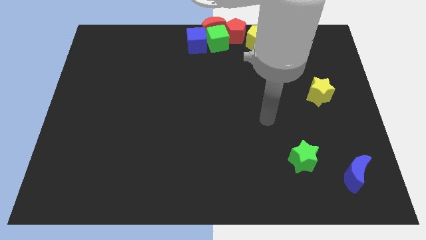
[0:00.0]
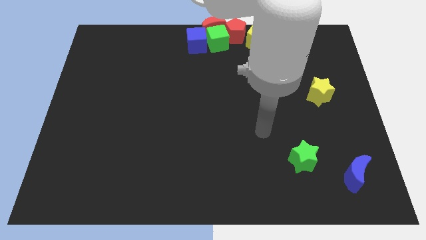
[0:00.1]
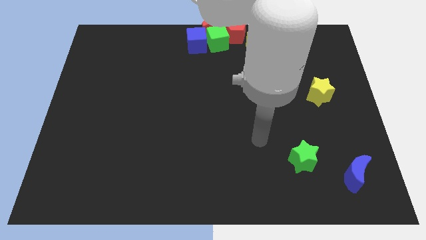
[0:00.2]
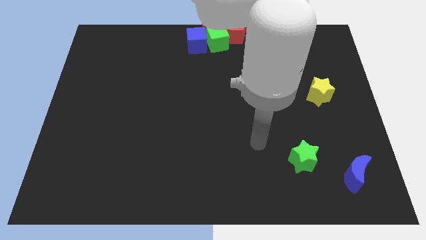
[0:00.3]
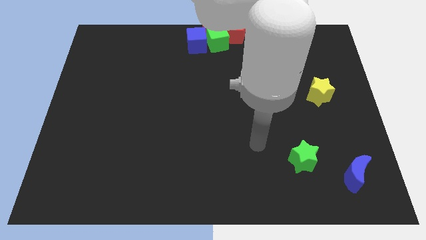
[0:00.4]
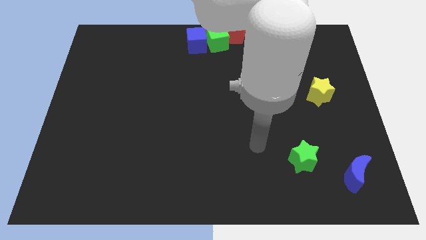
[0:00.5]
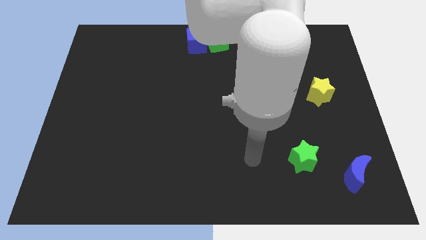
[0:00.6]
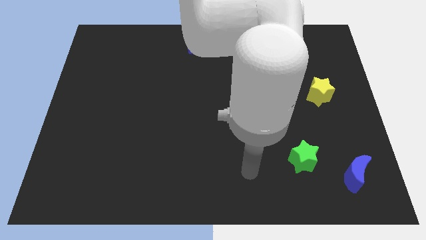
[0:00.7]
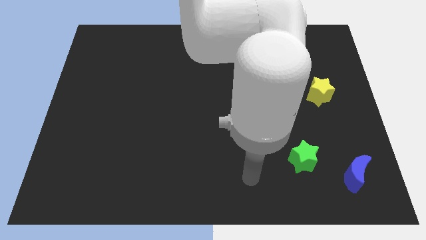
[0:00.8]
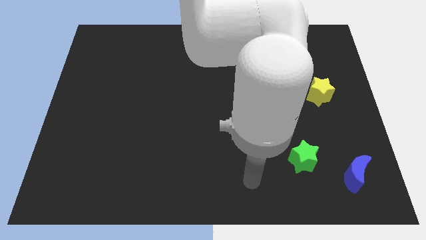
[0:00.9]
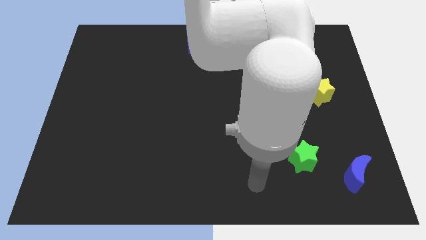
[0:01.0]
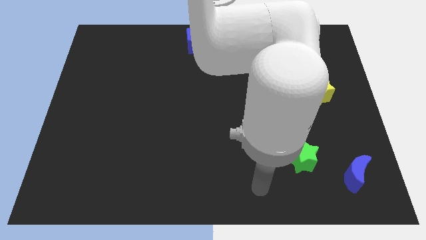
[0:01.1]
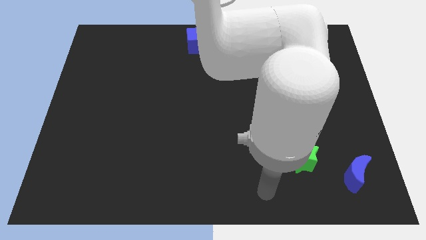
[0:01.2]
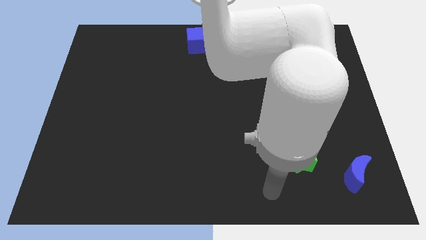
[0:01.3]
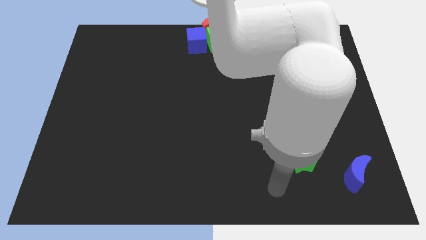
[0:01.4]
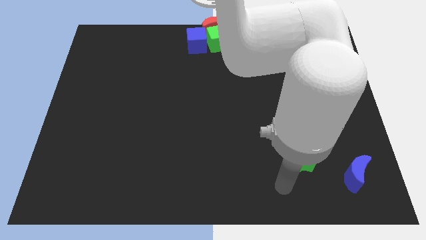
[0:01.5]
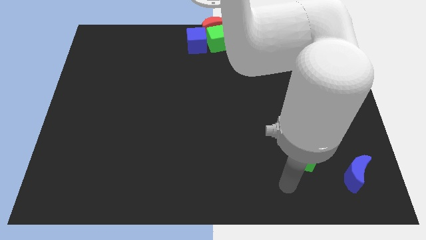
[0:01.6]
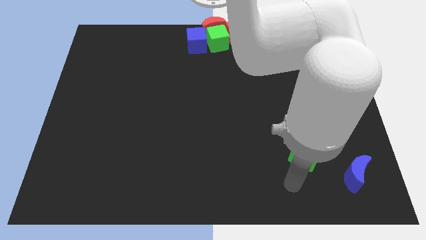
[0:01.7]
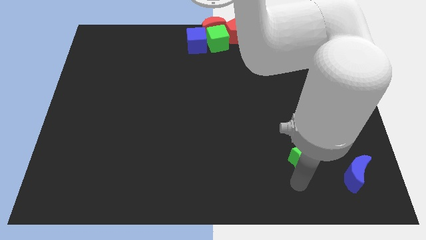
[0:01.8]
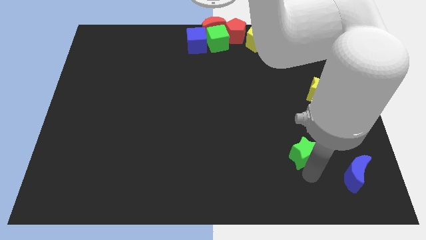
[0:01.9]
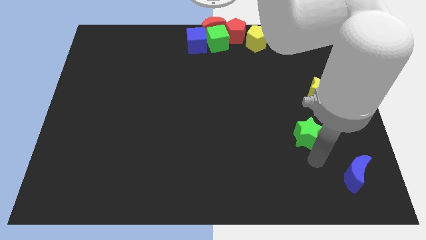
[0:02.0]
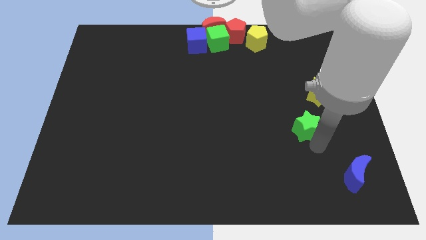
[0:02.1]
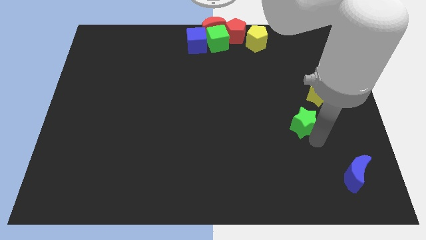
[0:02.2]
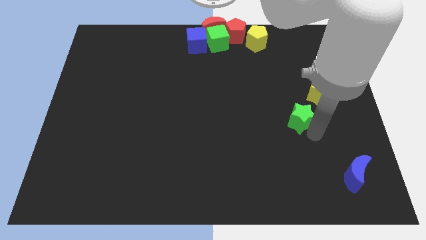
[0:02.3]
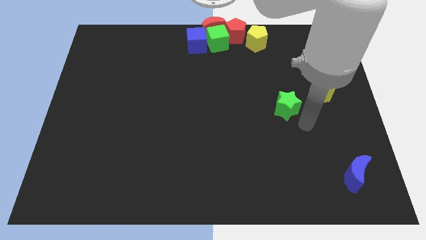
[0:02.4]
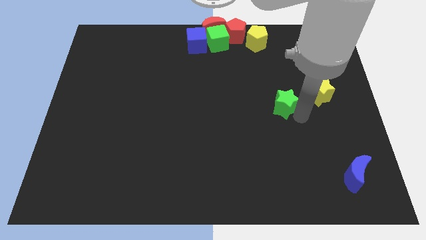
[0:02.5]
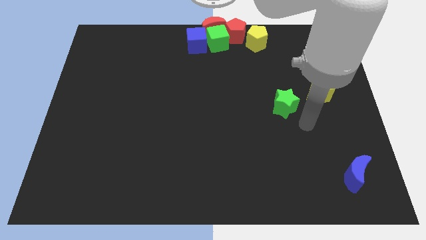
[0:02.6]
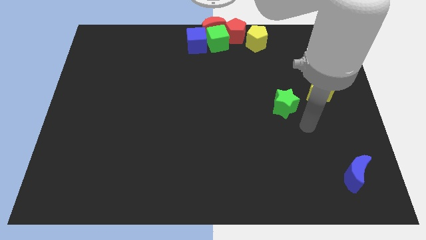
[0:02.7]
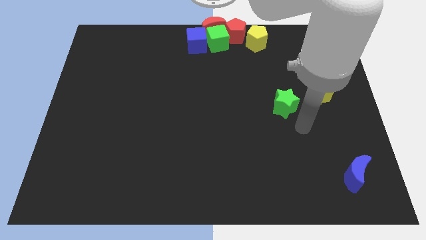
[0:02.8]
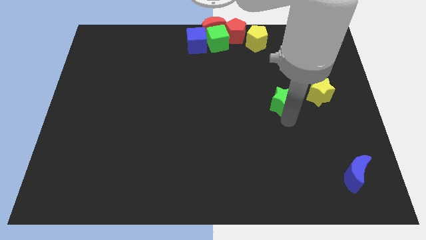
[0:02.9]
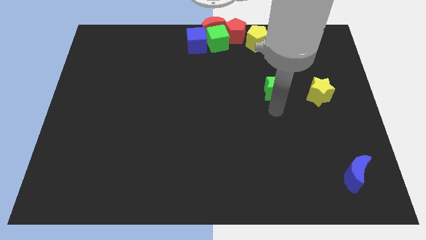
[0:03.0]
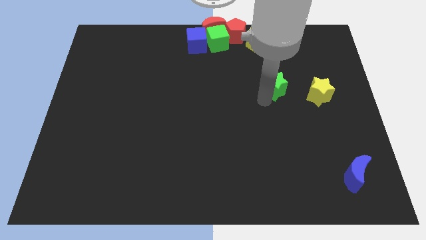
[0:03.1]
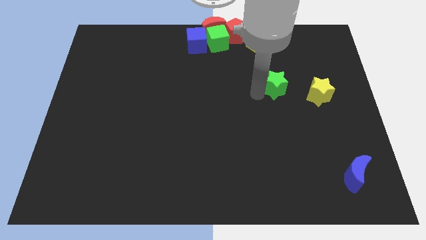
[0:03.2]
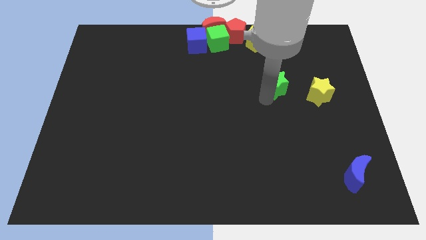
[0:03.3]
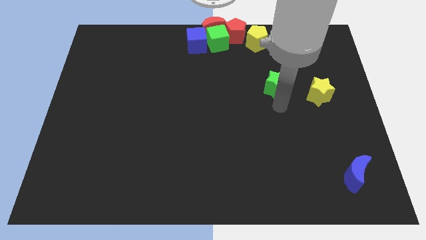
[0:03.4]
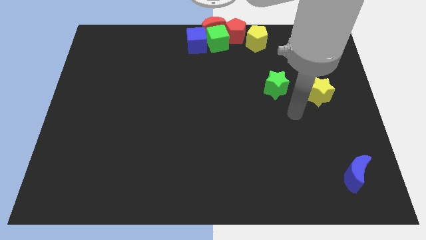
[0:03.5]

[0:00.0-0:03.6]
slide the green star diagonally to the blue crescent

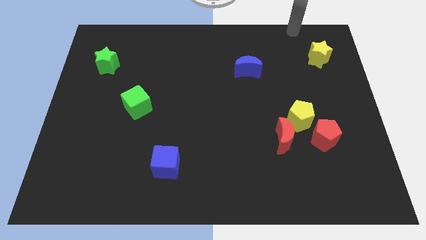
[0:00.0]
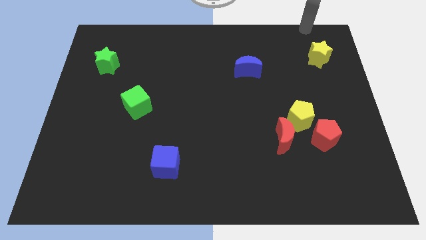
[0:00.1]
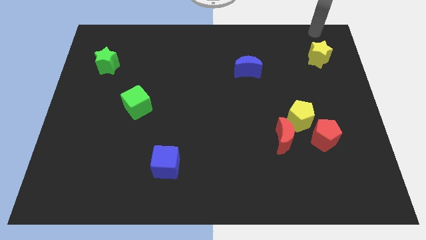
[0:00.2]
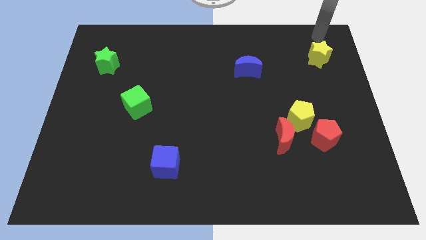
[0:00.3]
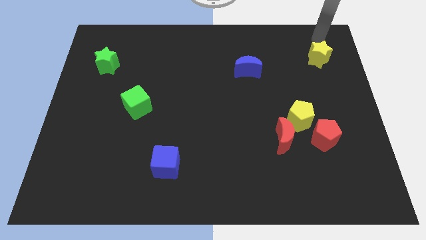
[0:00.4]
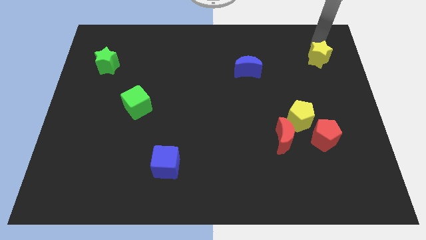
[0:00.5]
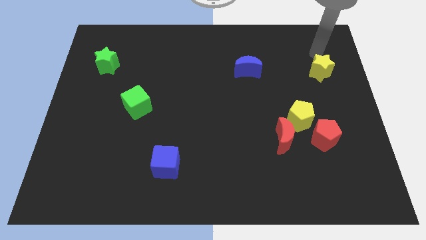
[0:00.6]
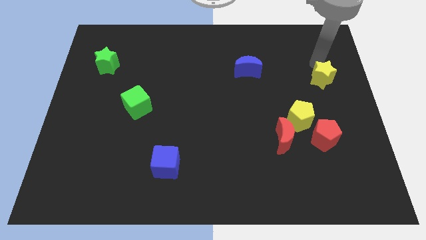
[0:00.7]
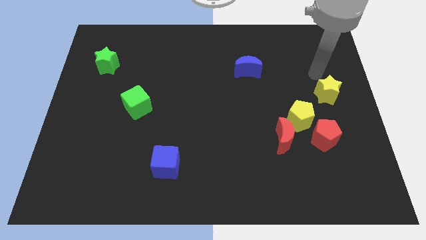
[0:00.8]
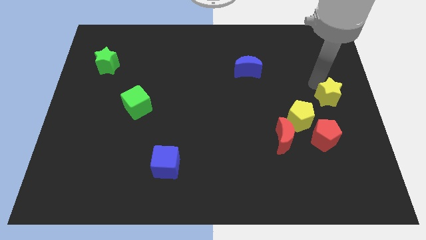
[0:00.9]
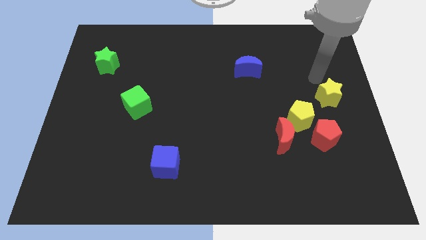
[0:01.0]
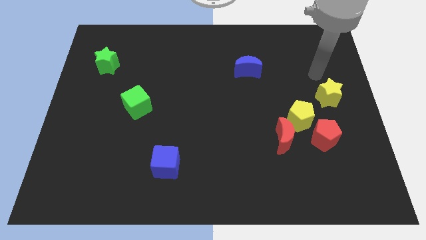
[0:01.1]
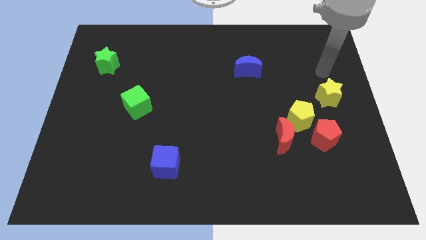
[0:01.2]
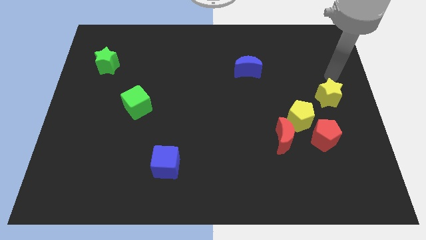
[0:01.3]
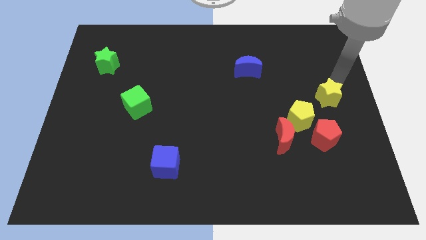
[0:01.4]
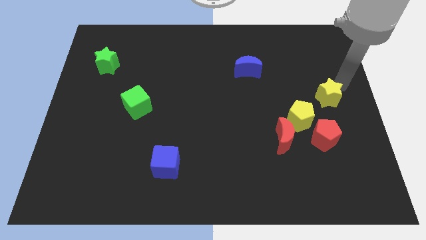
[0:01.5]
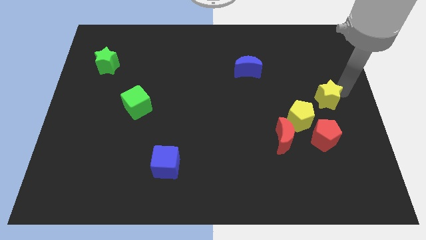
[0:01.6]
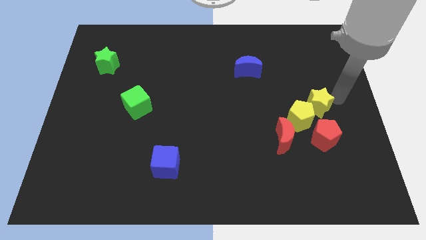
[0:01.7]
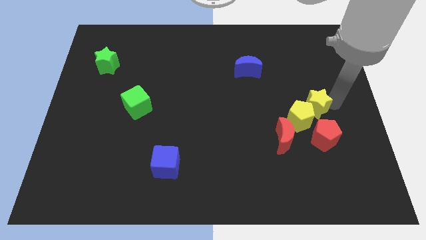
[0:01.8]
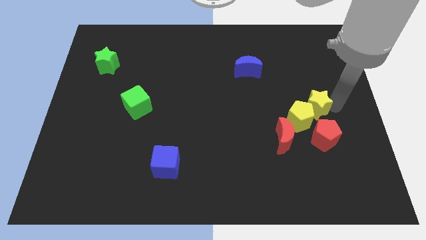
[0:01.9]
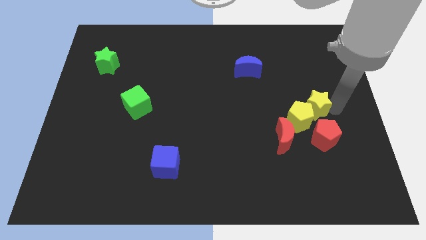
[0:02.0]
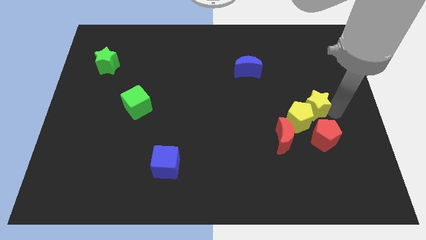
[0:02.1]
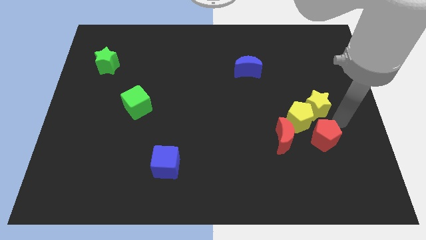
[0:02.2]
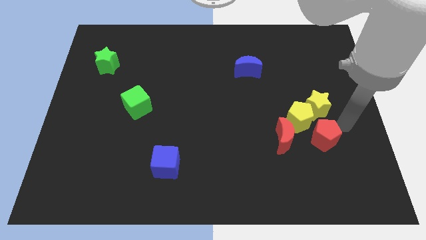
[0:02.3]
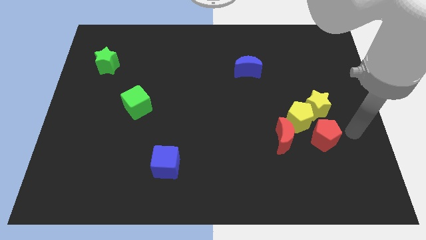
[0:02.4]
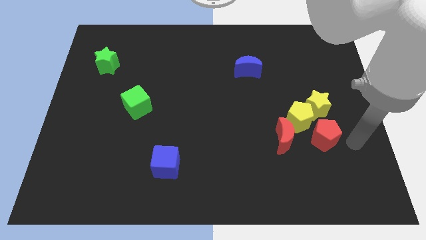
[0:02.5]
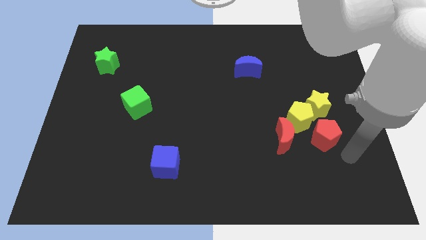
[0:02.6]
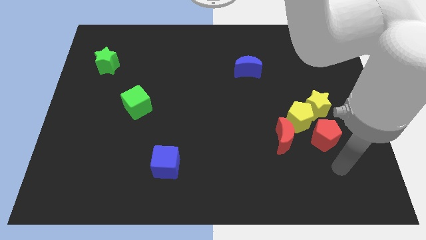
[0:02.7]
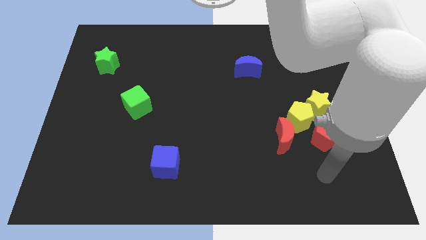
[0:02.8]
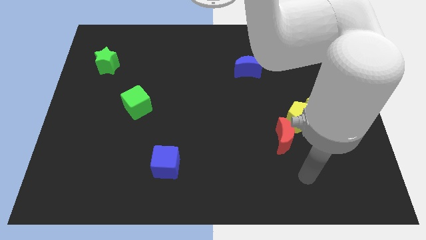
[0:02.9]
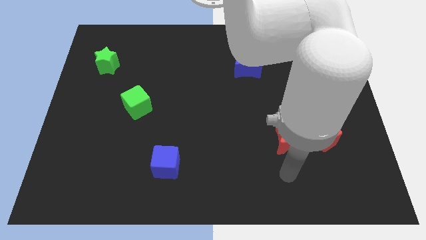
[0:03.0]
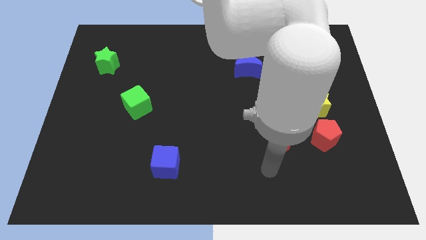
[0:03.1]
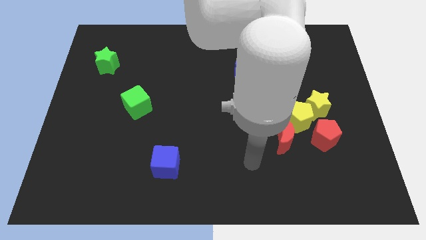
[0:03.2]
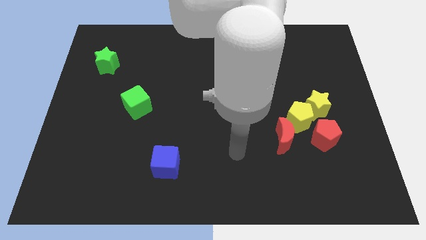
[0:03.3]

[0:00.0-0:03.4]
slide the yellow star into the yellow pentagon

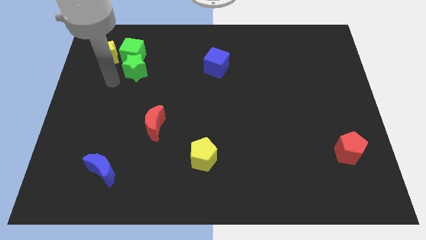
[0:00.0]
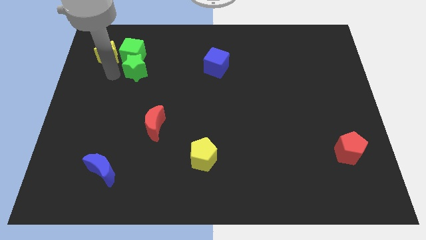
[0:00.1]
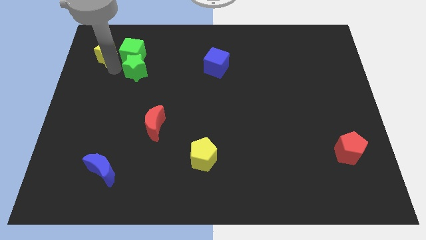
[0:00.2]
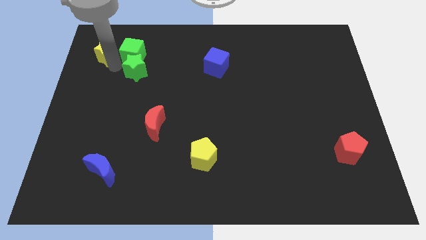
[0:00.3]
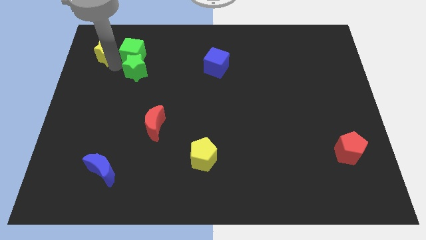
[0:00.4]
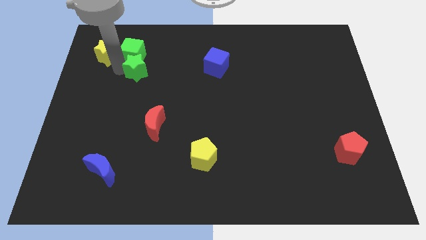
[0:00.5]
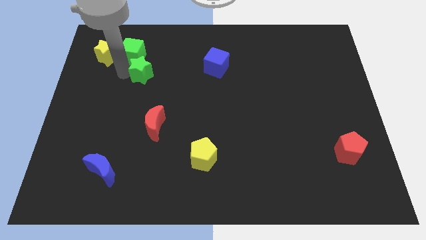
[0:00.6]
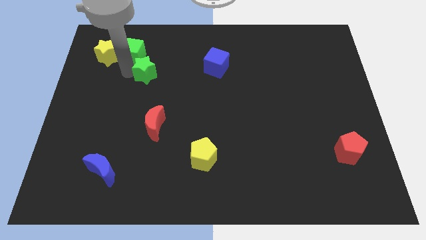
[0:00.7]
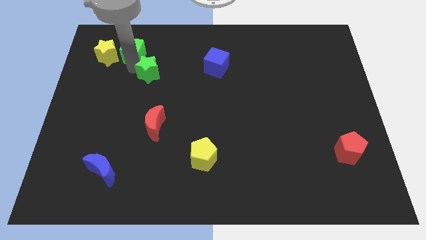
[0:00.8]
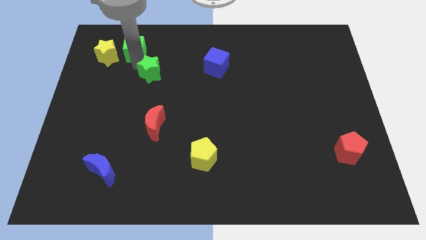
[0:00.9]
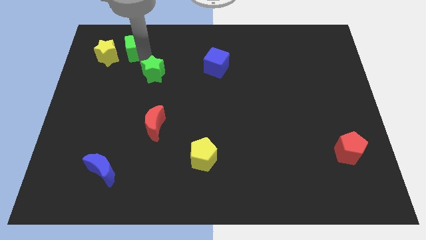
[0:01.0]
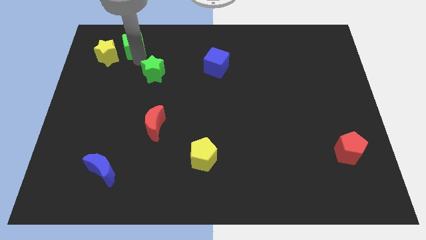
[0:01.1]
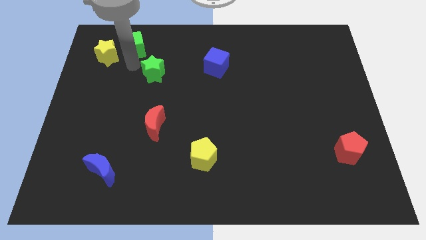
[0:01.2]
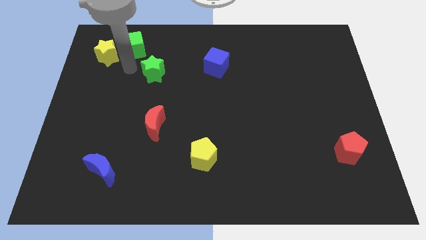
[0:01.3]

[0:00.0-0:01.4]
separate green star and green cube

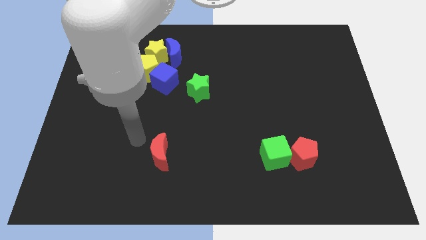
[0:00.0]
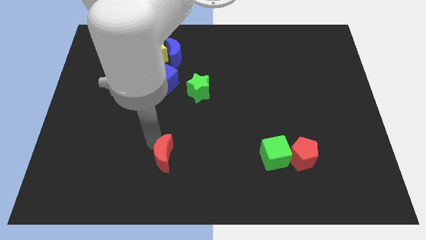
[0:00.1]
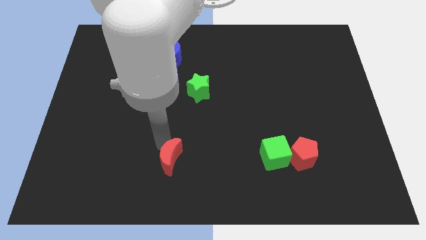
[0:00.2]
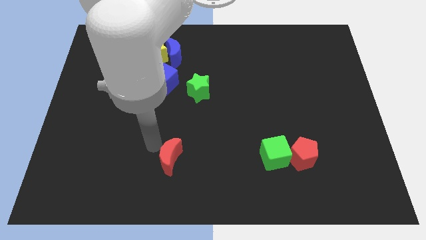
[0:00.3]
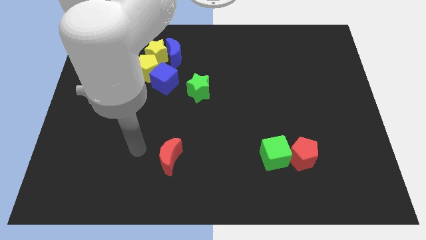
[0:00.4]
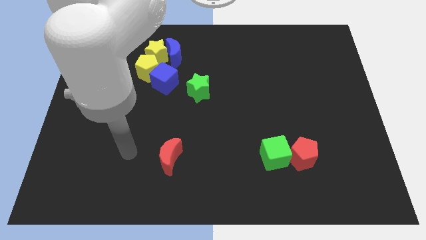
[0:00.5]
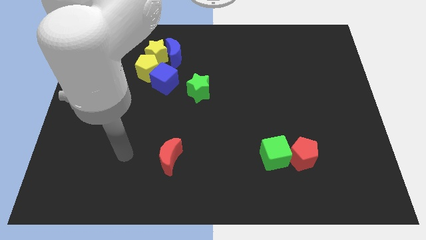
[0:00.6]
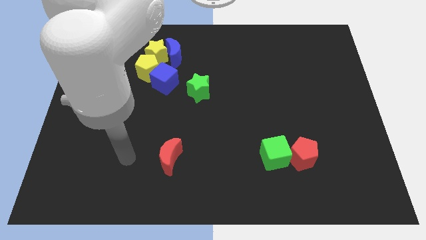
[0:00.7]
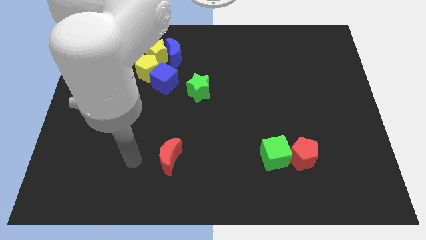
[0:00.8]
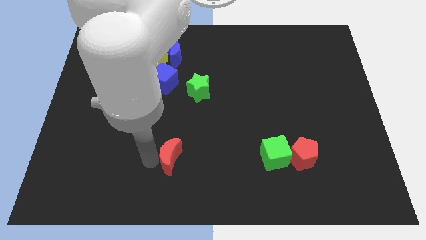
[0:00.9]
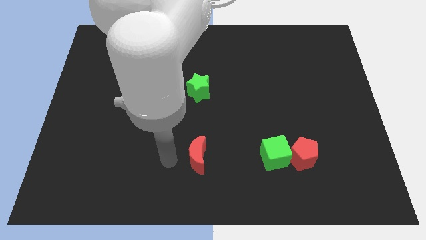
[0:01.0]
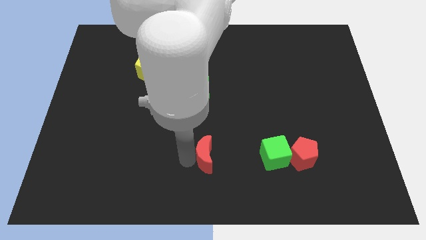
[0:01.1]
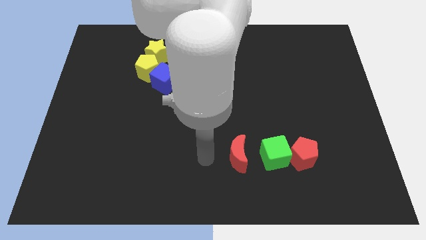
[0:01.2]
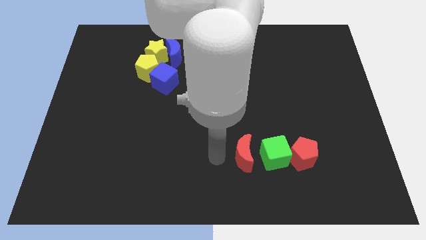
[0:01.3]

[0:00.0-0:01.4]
move the red moon towards the green cube
